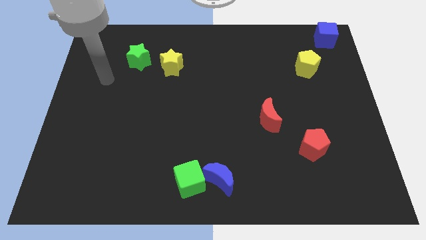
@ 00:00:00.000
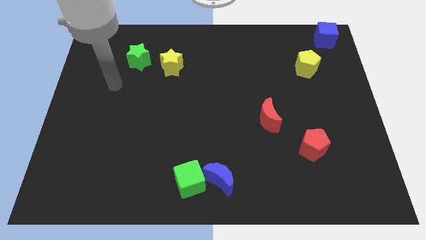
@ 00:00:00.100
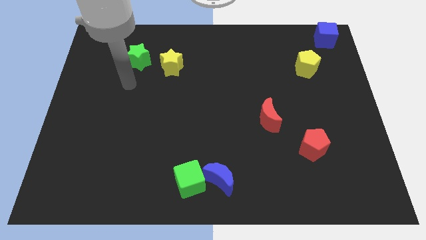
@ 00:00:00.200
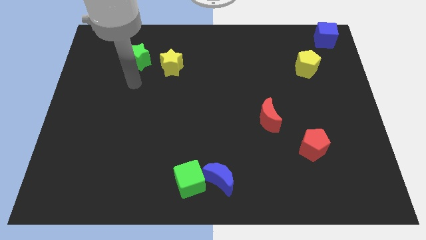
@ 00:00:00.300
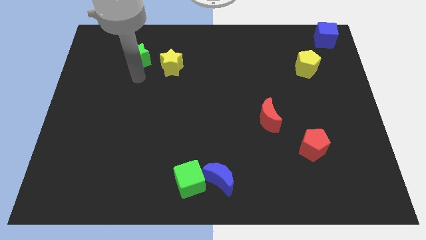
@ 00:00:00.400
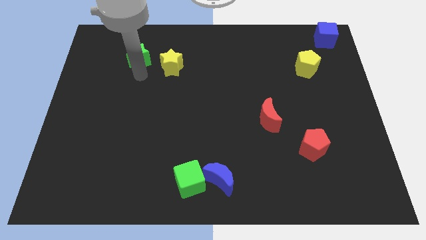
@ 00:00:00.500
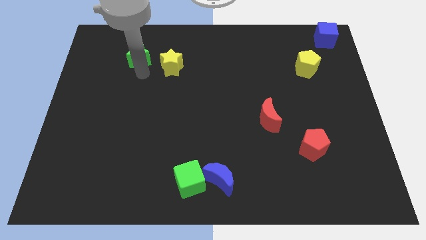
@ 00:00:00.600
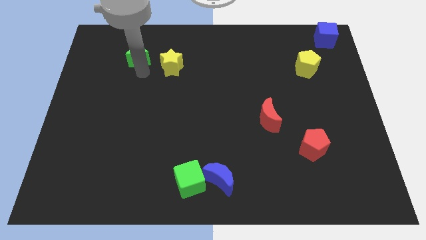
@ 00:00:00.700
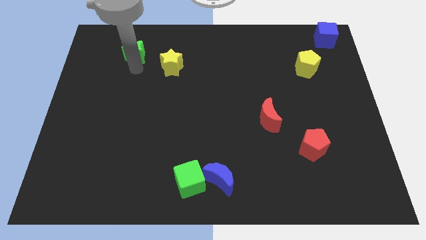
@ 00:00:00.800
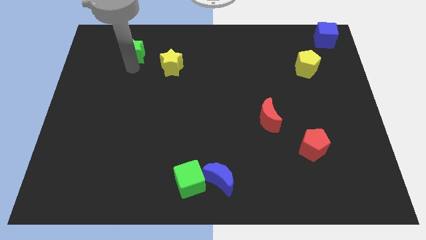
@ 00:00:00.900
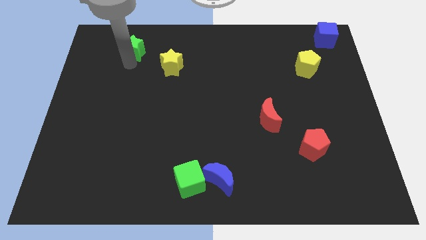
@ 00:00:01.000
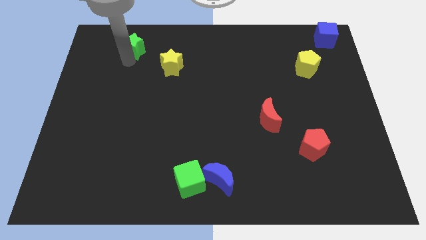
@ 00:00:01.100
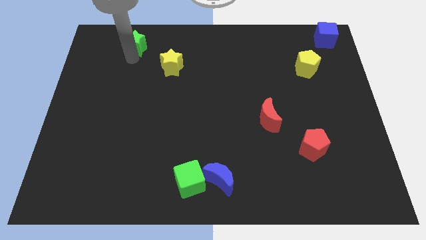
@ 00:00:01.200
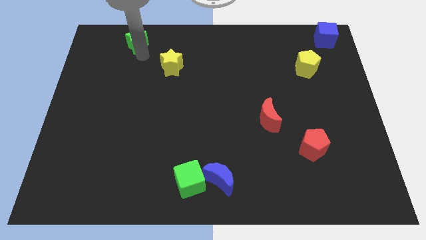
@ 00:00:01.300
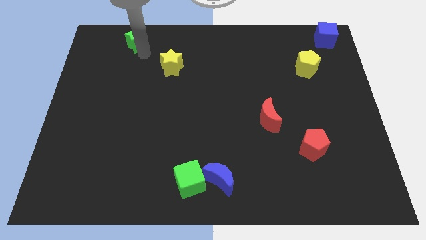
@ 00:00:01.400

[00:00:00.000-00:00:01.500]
slide the green star slightly up

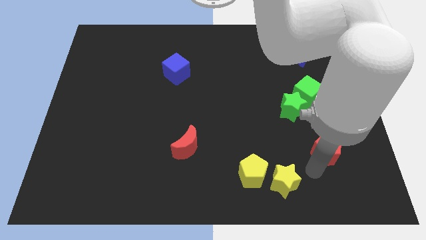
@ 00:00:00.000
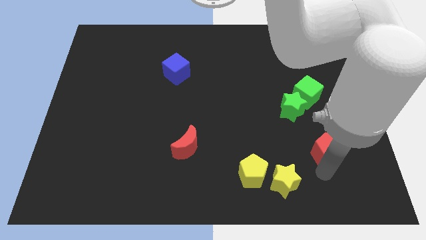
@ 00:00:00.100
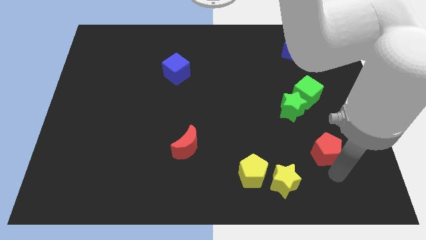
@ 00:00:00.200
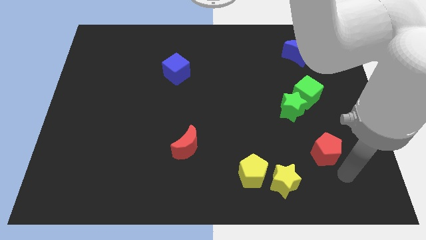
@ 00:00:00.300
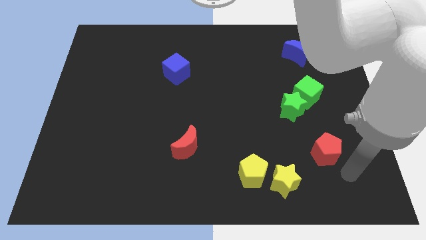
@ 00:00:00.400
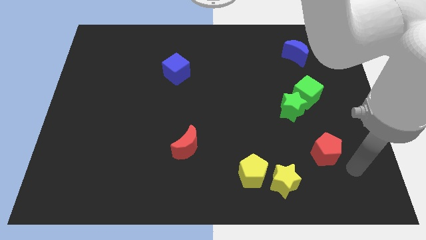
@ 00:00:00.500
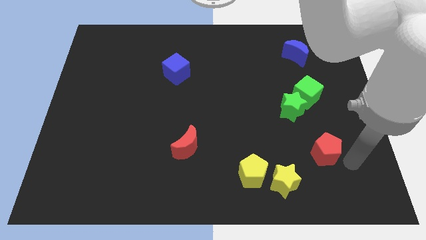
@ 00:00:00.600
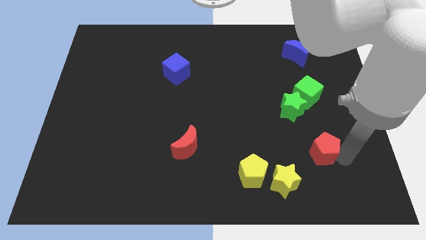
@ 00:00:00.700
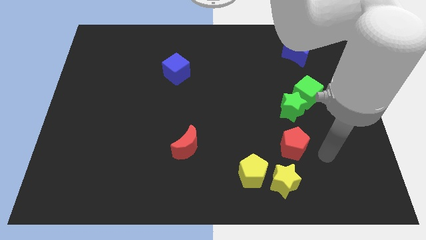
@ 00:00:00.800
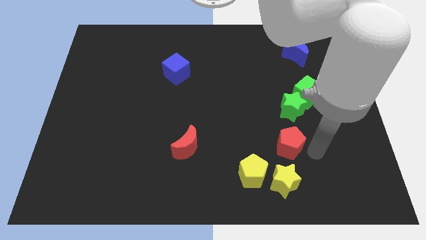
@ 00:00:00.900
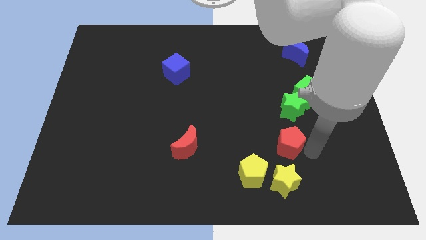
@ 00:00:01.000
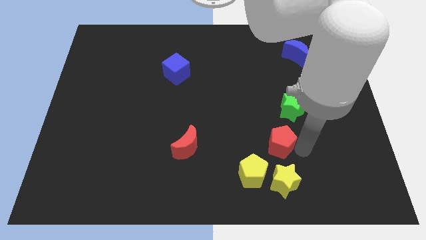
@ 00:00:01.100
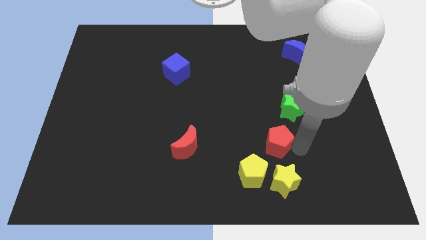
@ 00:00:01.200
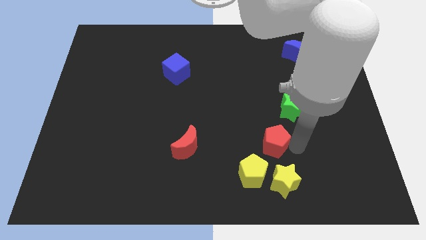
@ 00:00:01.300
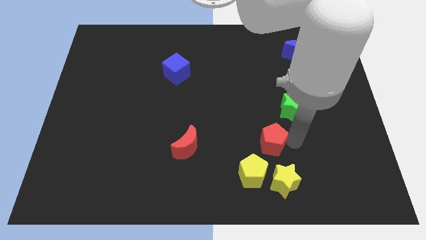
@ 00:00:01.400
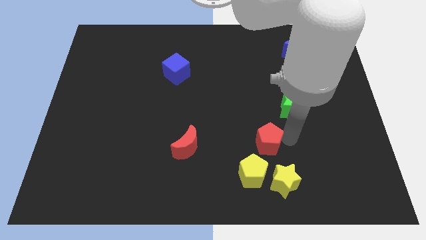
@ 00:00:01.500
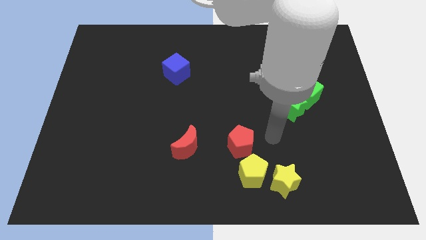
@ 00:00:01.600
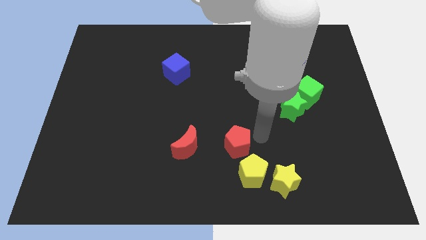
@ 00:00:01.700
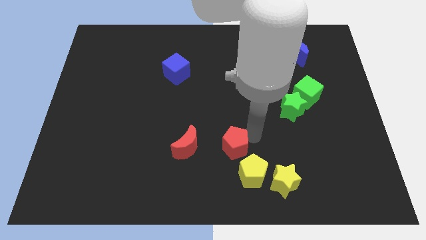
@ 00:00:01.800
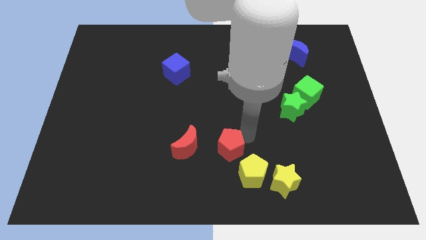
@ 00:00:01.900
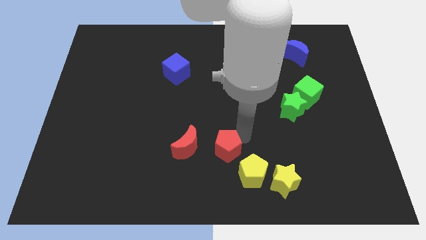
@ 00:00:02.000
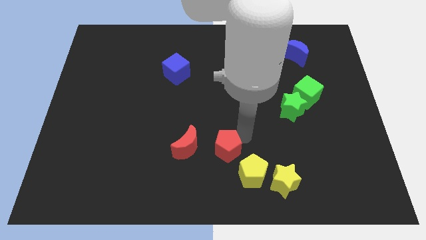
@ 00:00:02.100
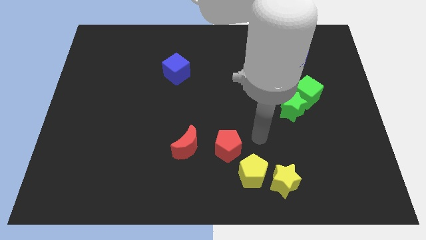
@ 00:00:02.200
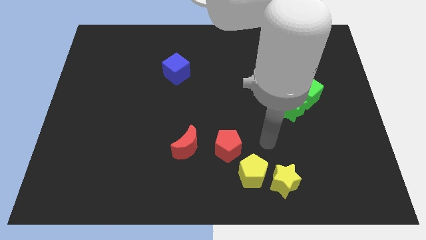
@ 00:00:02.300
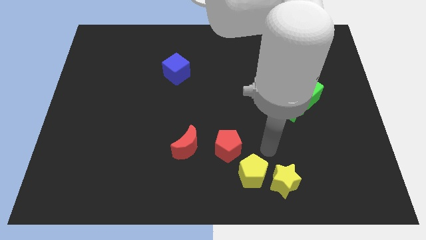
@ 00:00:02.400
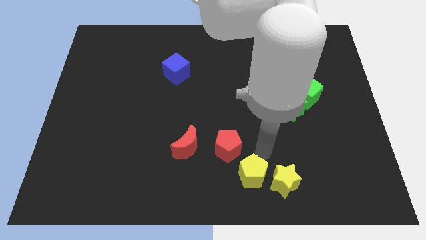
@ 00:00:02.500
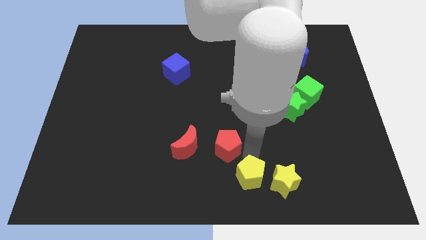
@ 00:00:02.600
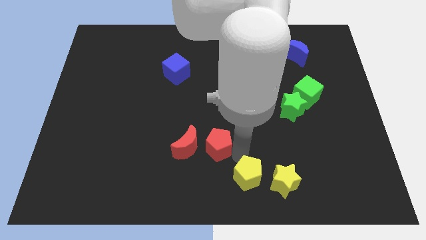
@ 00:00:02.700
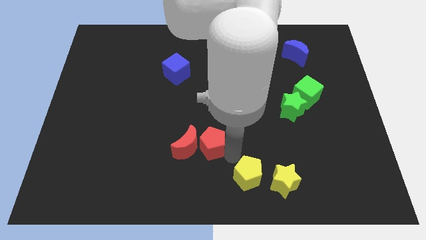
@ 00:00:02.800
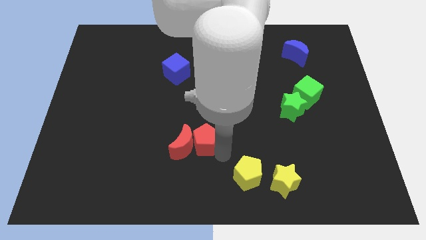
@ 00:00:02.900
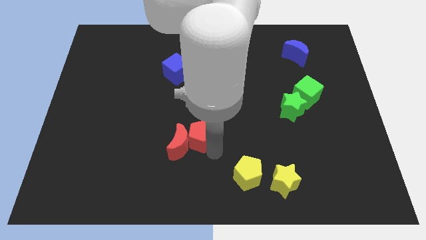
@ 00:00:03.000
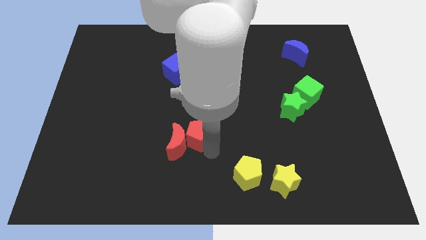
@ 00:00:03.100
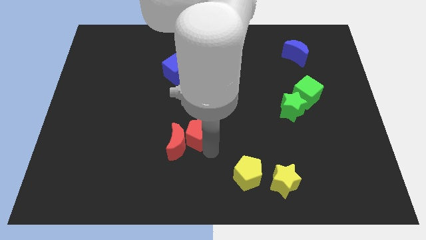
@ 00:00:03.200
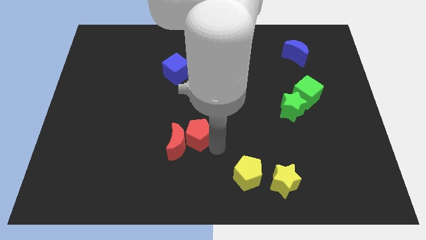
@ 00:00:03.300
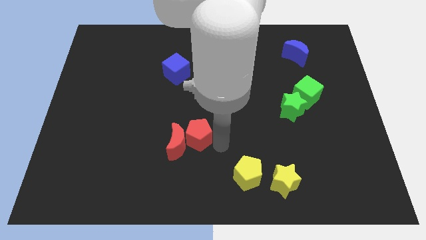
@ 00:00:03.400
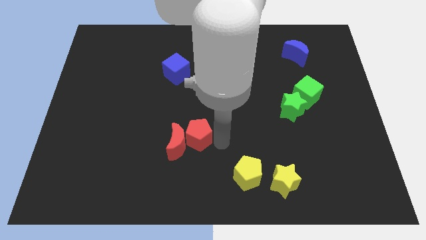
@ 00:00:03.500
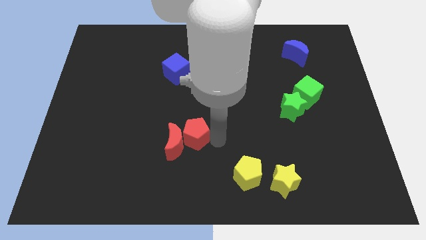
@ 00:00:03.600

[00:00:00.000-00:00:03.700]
push the red pentagon into red moon

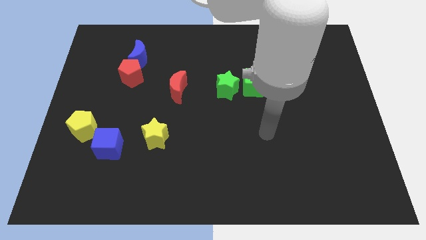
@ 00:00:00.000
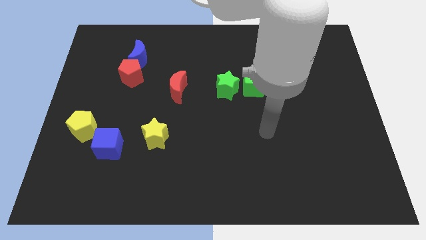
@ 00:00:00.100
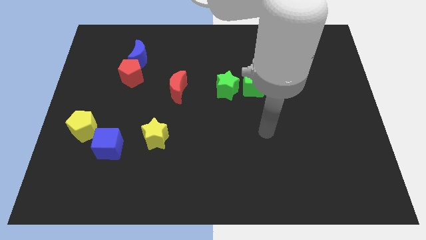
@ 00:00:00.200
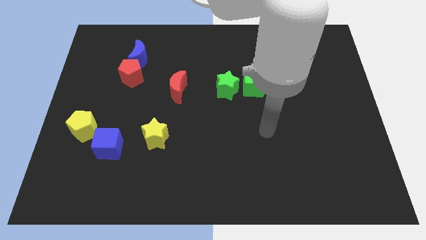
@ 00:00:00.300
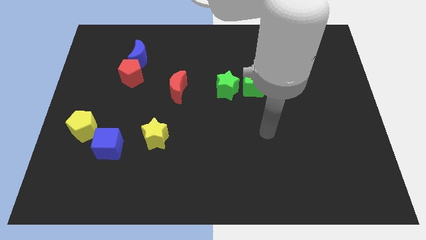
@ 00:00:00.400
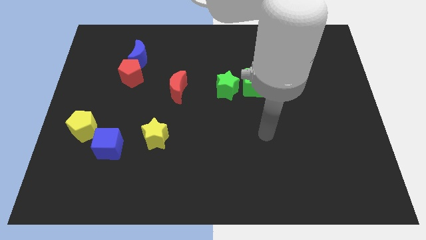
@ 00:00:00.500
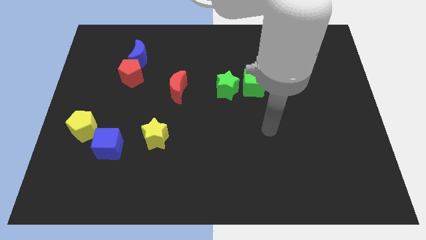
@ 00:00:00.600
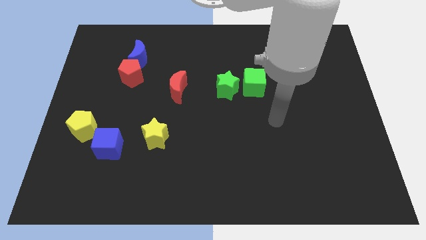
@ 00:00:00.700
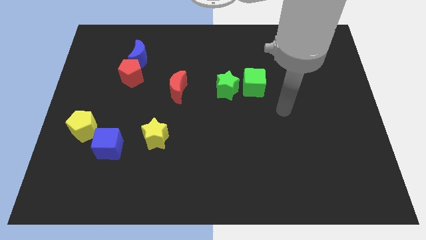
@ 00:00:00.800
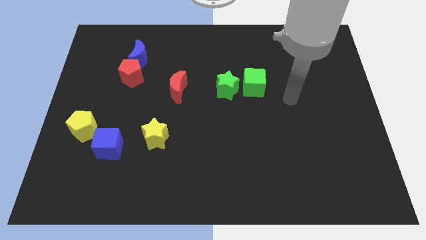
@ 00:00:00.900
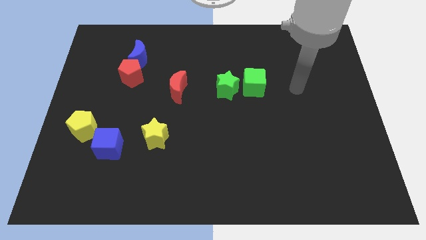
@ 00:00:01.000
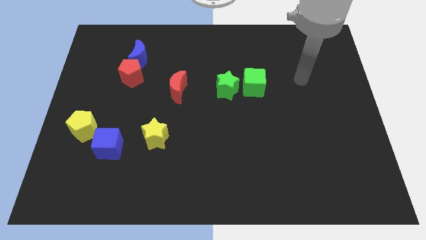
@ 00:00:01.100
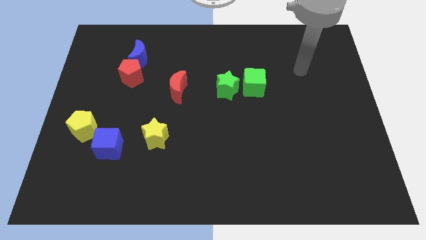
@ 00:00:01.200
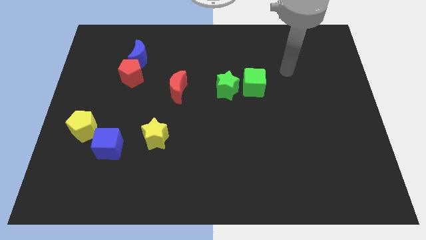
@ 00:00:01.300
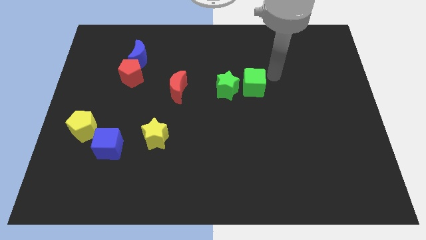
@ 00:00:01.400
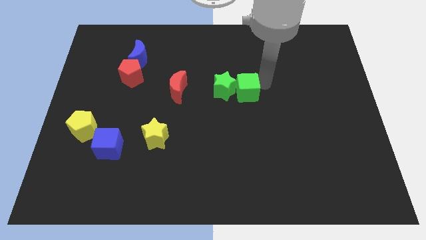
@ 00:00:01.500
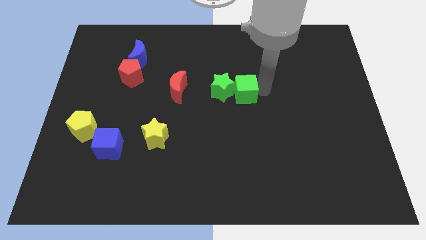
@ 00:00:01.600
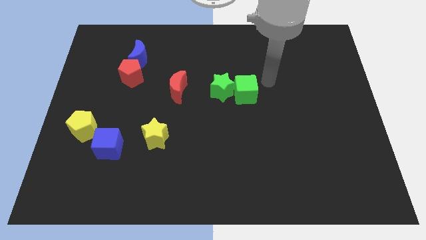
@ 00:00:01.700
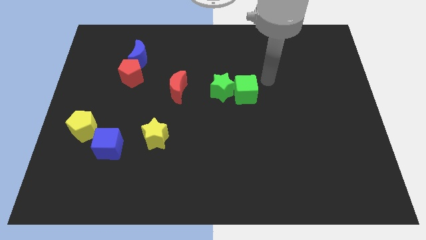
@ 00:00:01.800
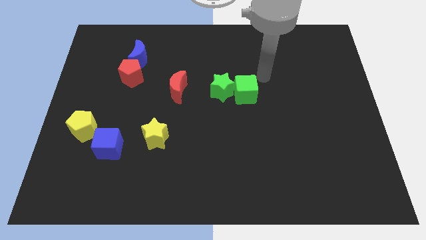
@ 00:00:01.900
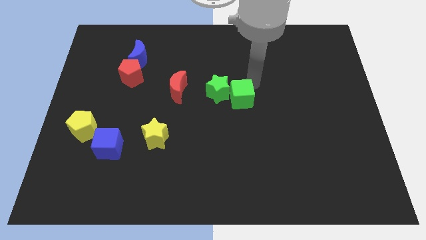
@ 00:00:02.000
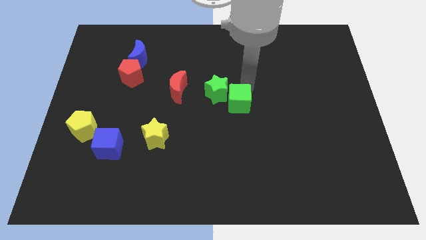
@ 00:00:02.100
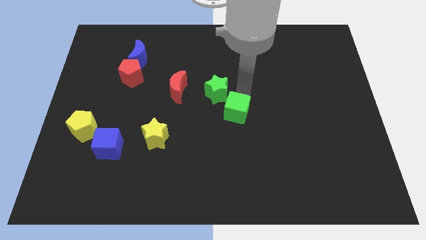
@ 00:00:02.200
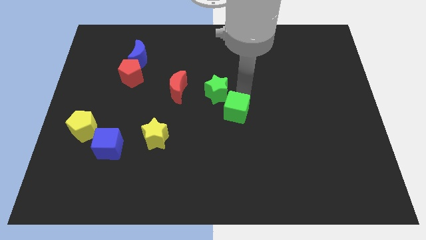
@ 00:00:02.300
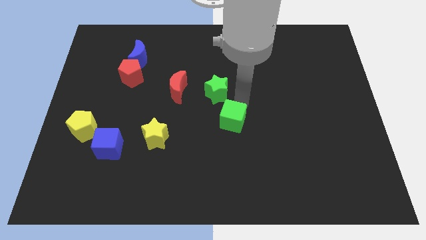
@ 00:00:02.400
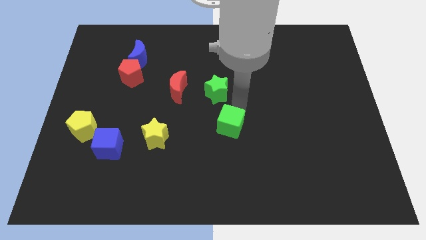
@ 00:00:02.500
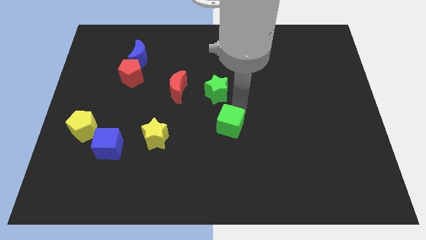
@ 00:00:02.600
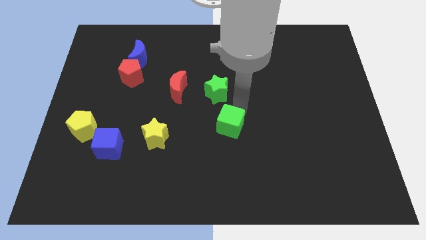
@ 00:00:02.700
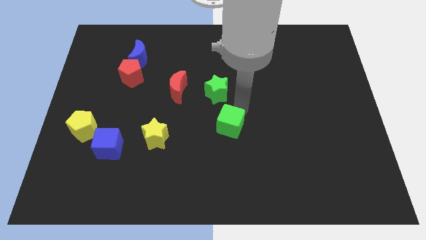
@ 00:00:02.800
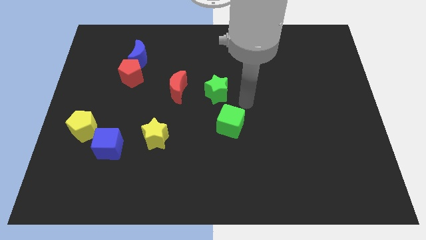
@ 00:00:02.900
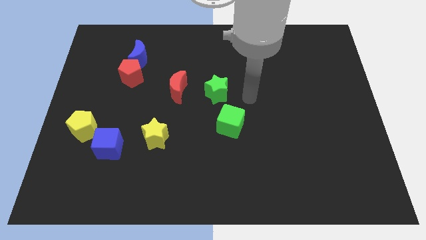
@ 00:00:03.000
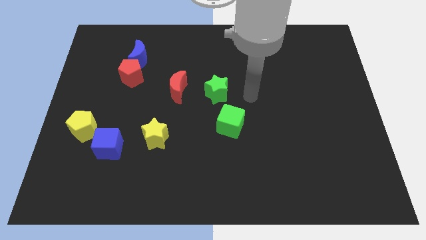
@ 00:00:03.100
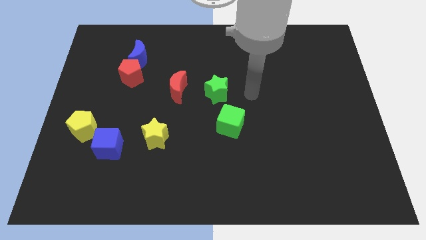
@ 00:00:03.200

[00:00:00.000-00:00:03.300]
move the green cube to the bottom

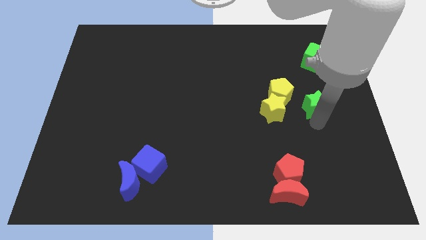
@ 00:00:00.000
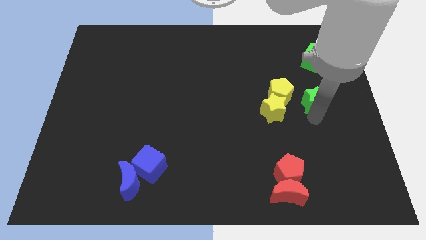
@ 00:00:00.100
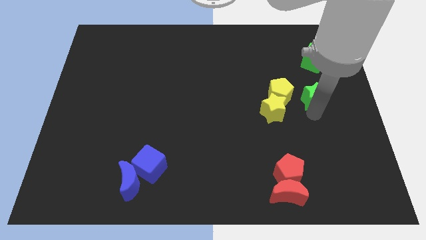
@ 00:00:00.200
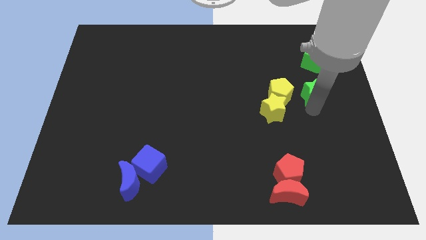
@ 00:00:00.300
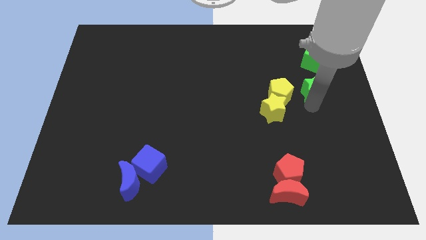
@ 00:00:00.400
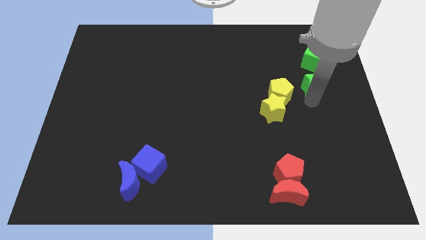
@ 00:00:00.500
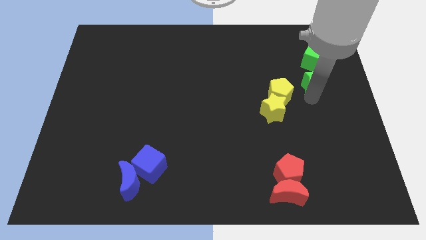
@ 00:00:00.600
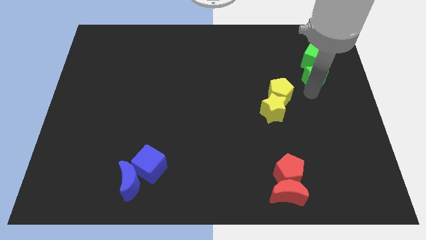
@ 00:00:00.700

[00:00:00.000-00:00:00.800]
place the green star below the green cube
